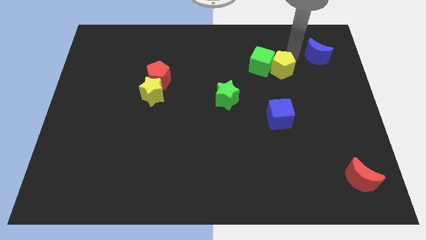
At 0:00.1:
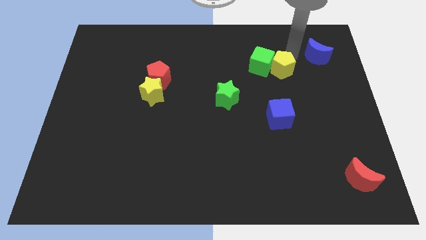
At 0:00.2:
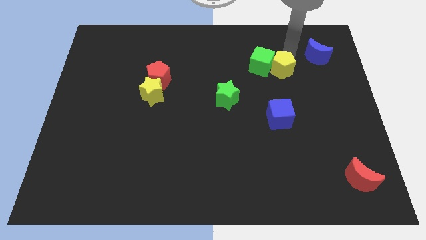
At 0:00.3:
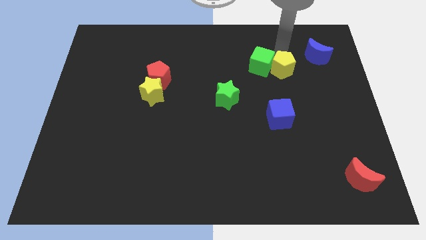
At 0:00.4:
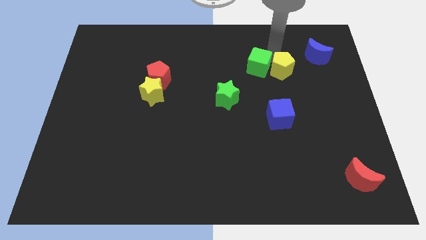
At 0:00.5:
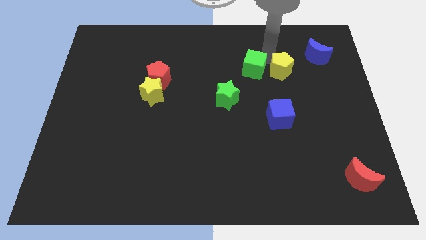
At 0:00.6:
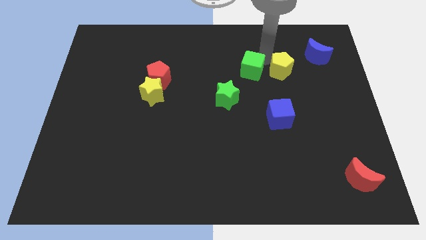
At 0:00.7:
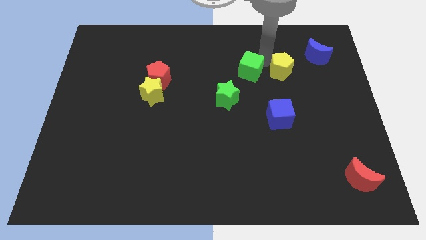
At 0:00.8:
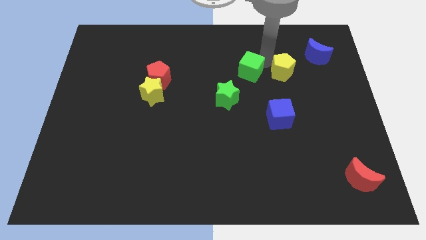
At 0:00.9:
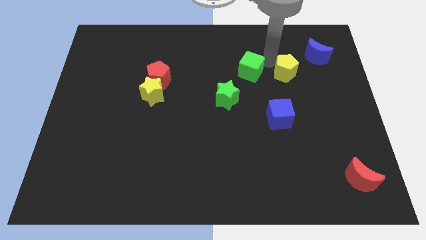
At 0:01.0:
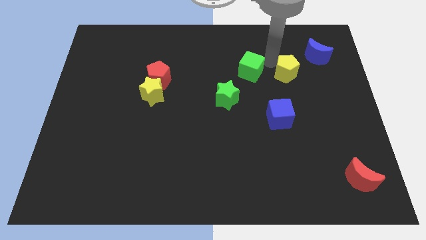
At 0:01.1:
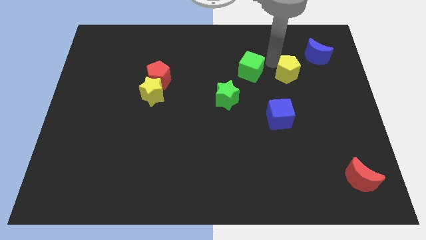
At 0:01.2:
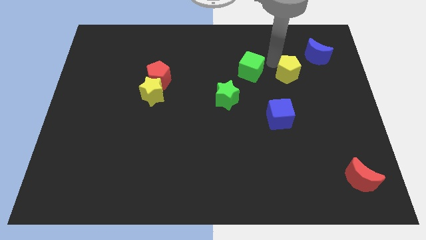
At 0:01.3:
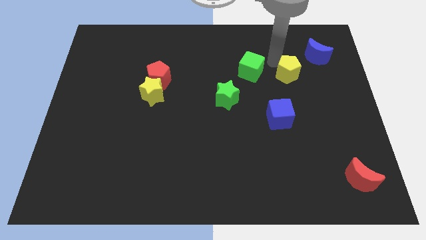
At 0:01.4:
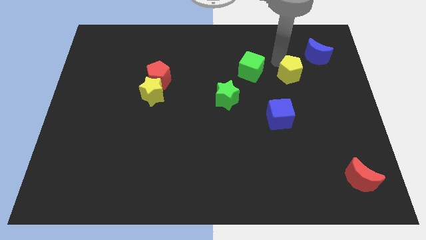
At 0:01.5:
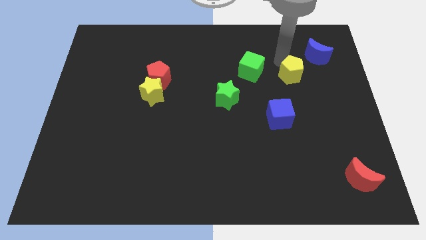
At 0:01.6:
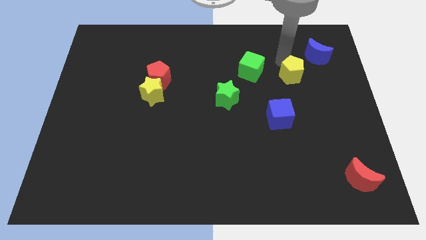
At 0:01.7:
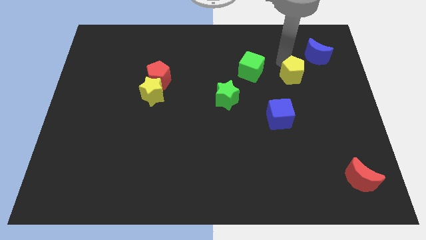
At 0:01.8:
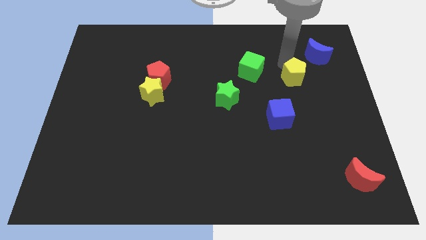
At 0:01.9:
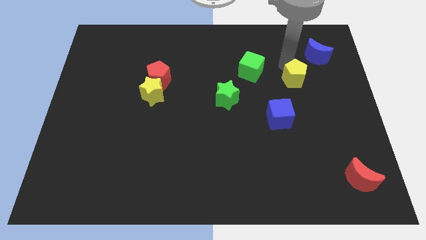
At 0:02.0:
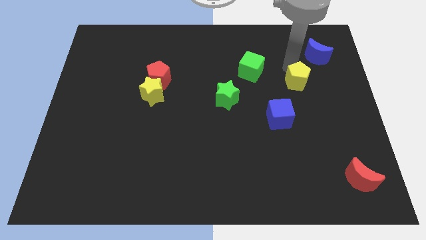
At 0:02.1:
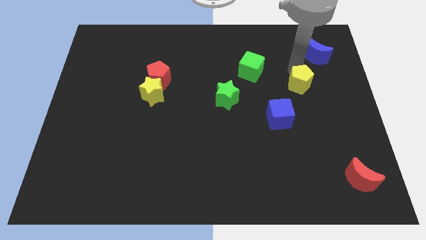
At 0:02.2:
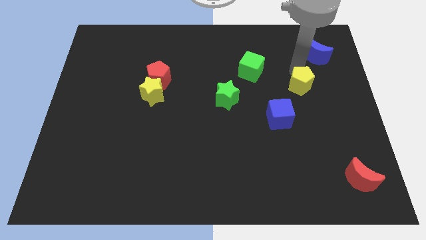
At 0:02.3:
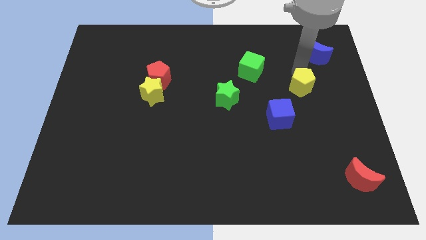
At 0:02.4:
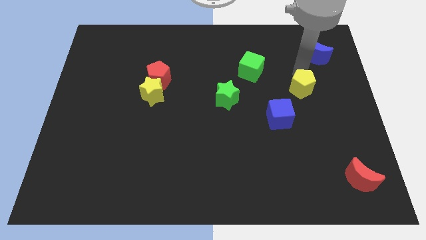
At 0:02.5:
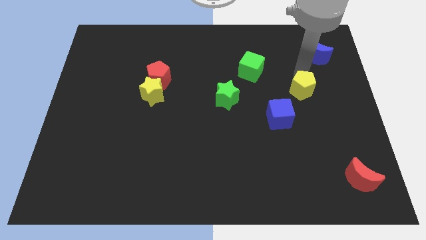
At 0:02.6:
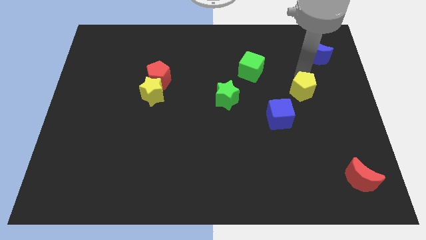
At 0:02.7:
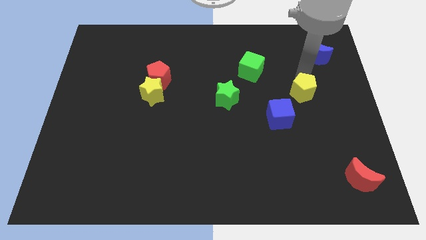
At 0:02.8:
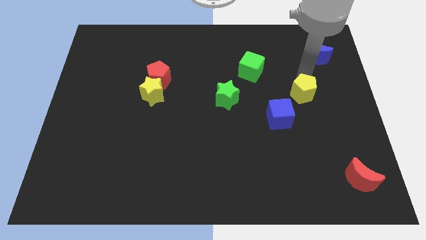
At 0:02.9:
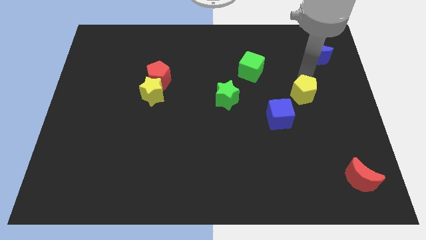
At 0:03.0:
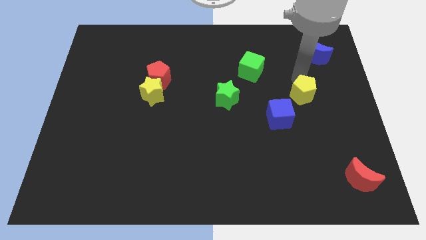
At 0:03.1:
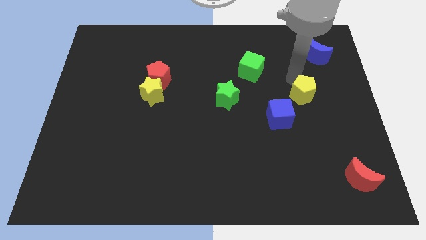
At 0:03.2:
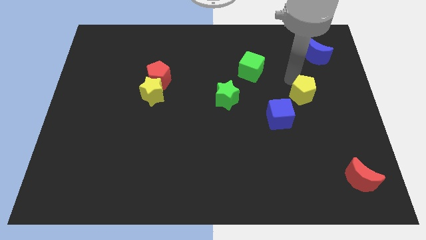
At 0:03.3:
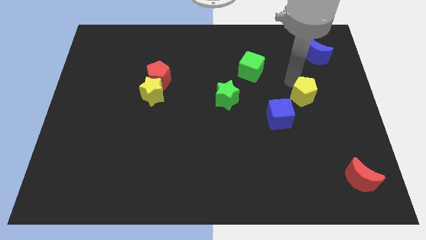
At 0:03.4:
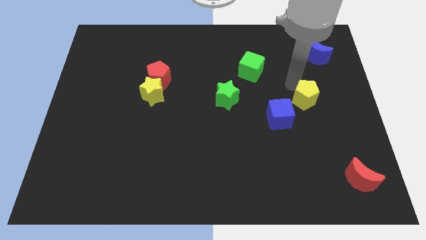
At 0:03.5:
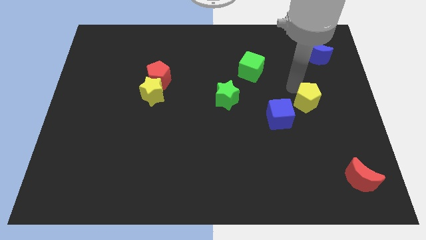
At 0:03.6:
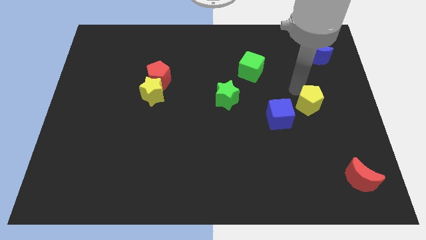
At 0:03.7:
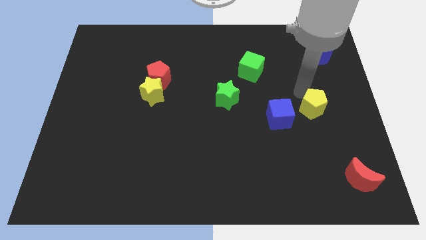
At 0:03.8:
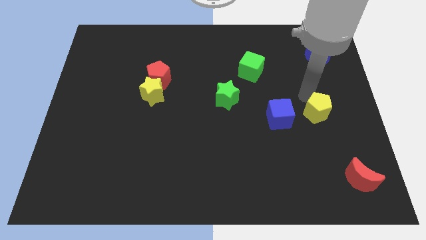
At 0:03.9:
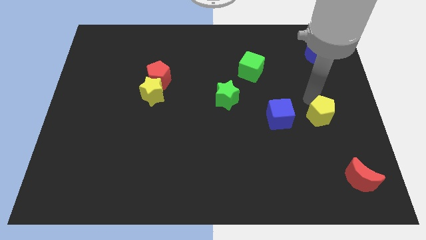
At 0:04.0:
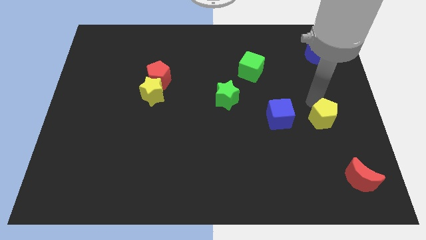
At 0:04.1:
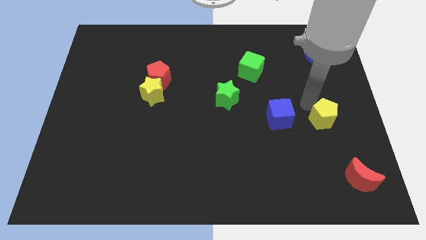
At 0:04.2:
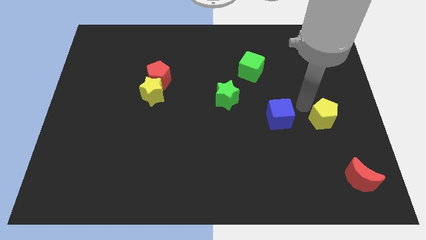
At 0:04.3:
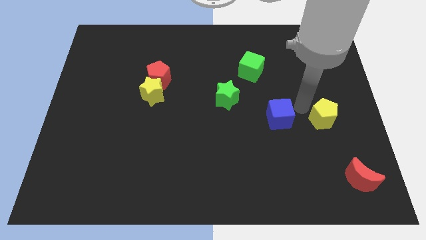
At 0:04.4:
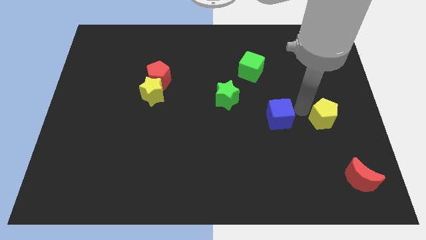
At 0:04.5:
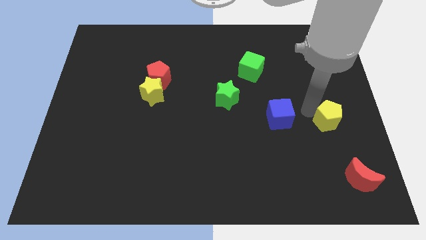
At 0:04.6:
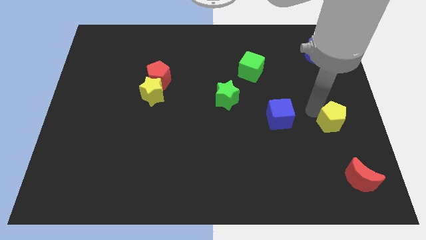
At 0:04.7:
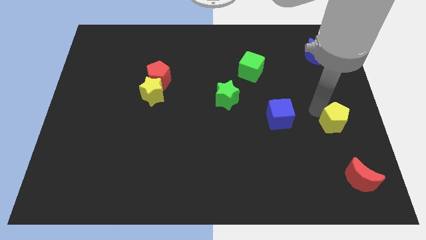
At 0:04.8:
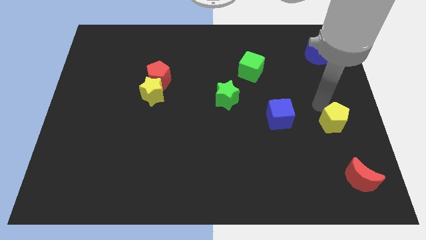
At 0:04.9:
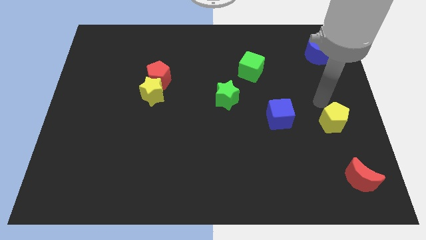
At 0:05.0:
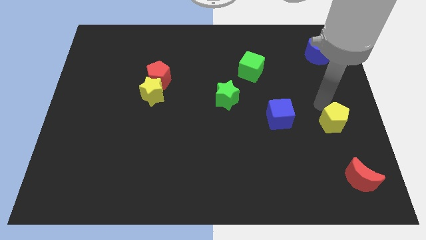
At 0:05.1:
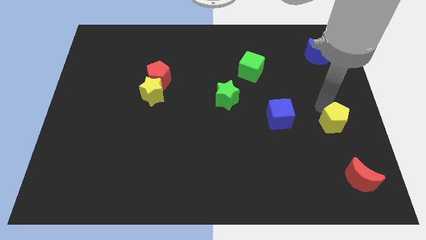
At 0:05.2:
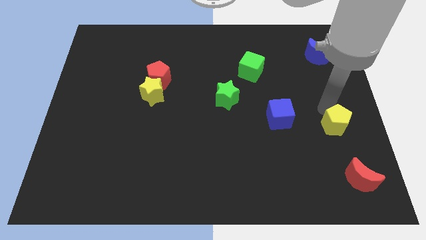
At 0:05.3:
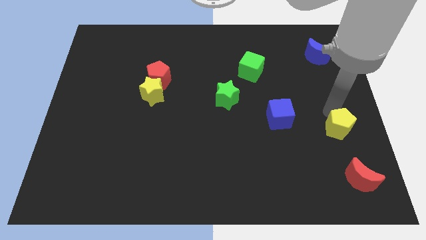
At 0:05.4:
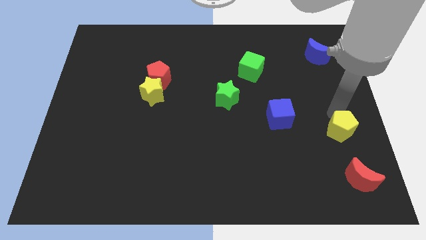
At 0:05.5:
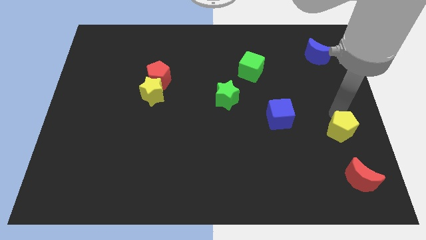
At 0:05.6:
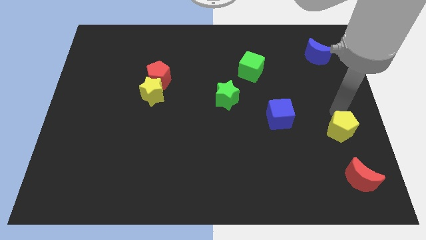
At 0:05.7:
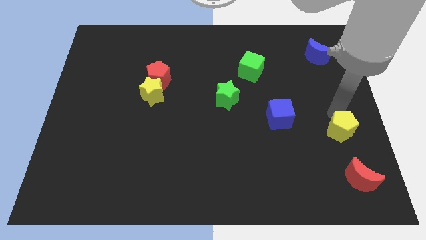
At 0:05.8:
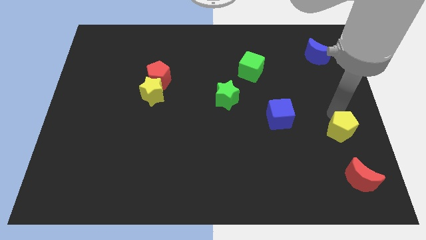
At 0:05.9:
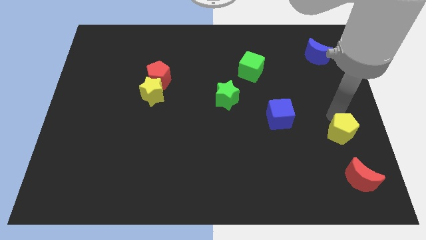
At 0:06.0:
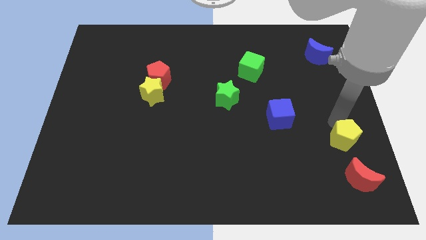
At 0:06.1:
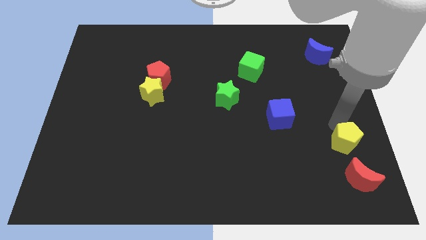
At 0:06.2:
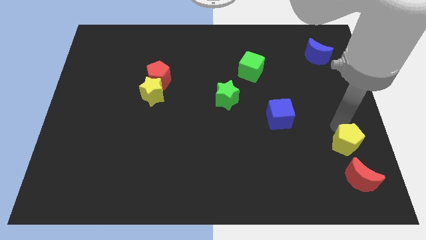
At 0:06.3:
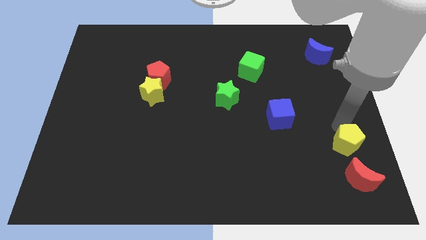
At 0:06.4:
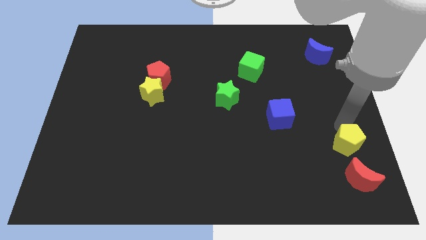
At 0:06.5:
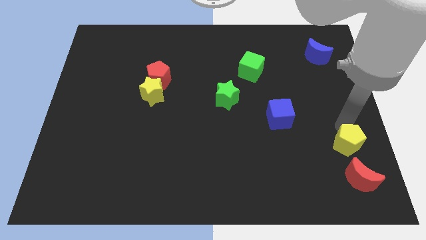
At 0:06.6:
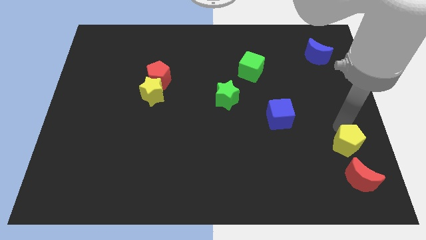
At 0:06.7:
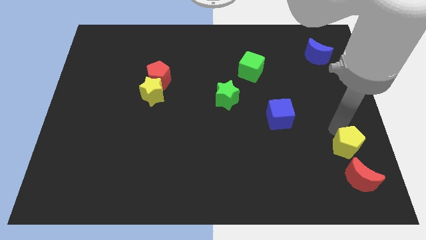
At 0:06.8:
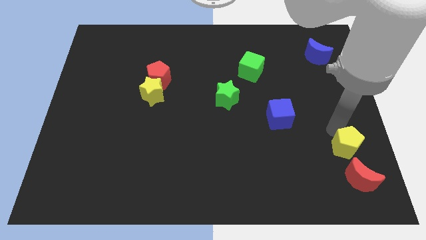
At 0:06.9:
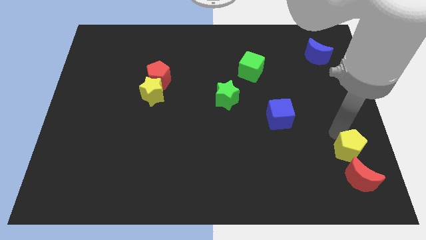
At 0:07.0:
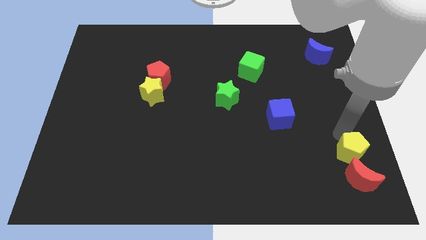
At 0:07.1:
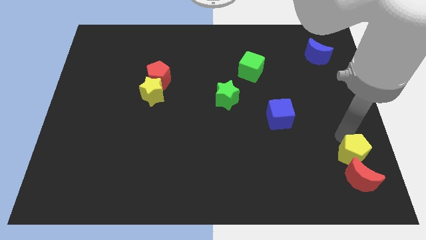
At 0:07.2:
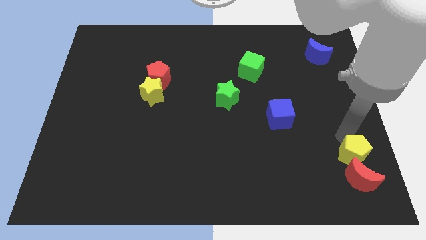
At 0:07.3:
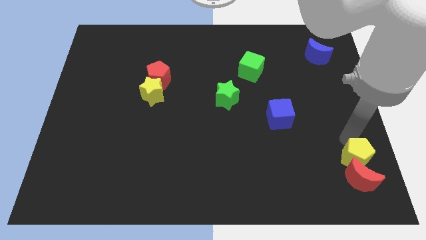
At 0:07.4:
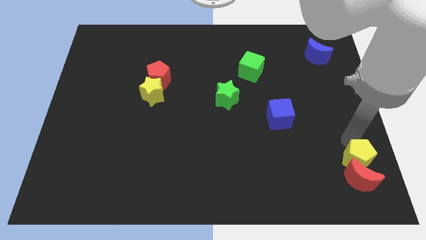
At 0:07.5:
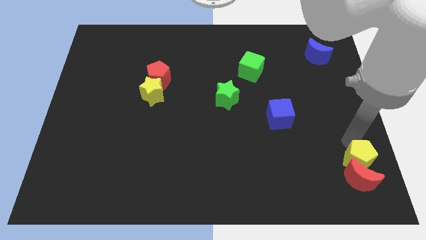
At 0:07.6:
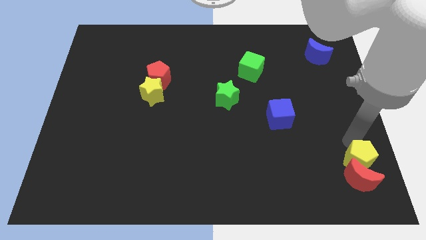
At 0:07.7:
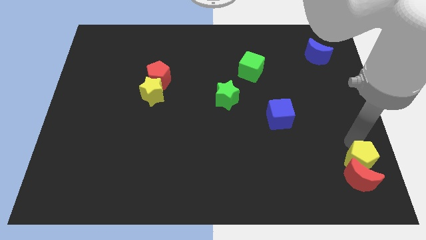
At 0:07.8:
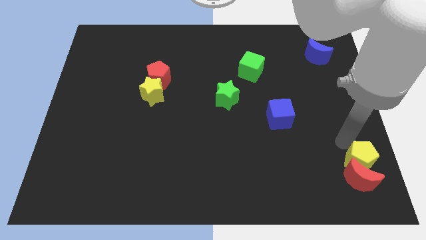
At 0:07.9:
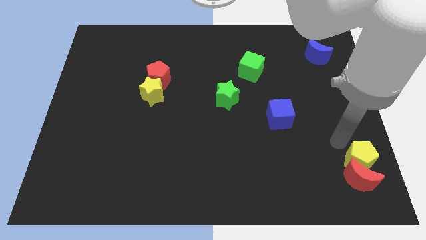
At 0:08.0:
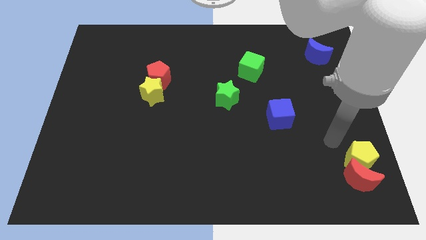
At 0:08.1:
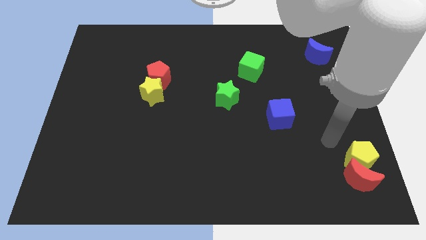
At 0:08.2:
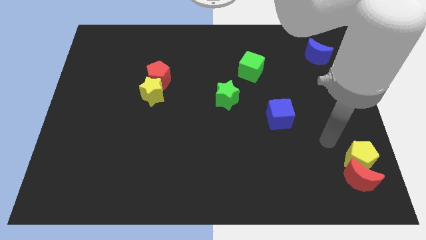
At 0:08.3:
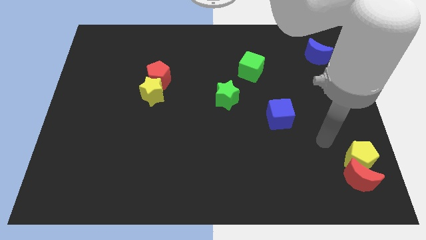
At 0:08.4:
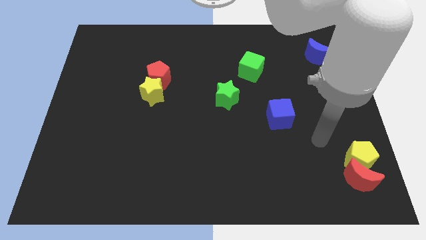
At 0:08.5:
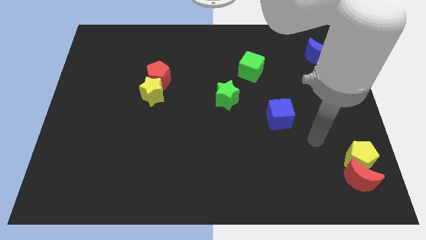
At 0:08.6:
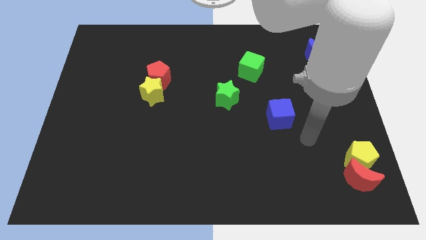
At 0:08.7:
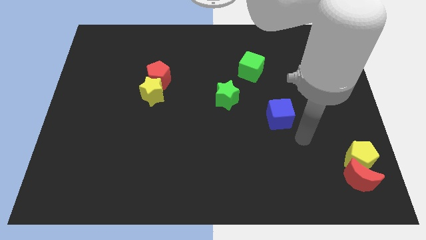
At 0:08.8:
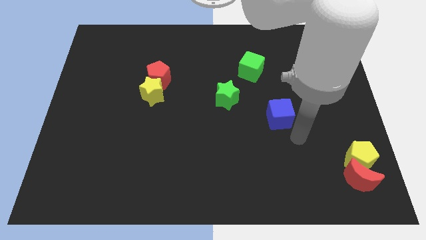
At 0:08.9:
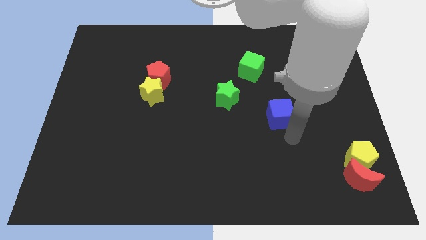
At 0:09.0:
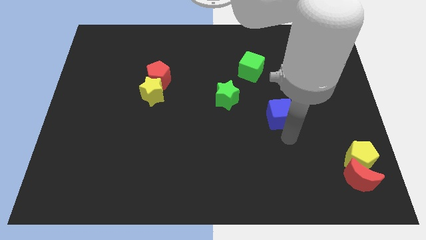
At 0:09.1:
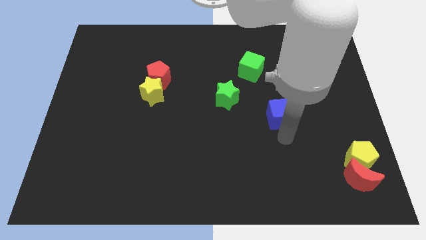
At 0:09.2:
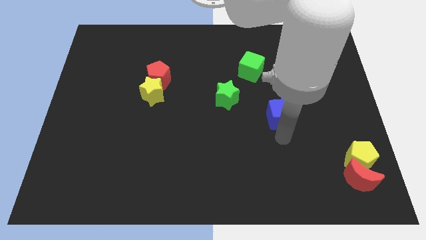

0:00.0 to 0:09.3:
move yellow pentagon into top of the red moon
